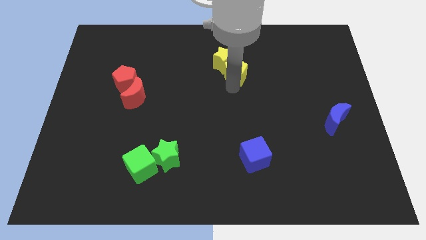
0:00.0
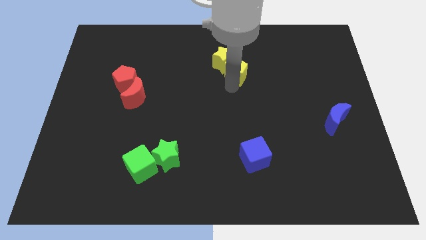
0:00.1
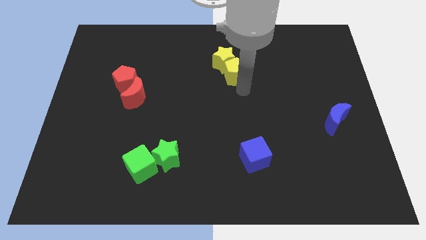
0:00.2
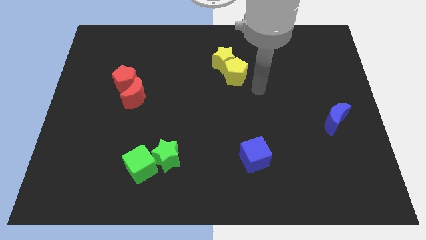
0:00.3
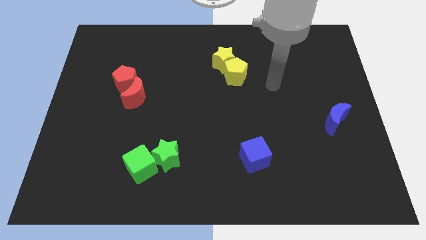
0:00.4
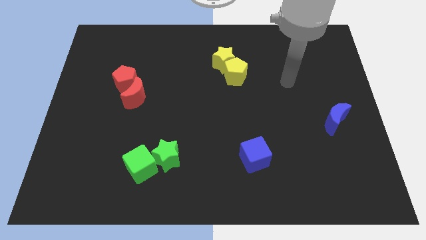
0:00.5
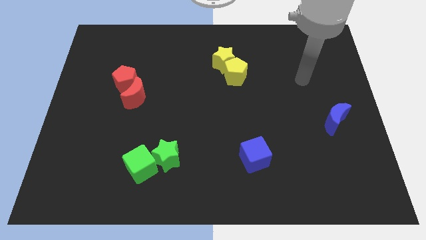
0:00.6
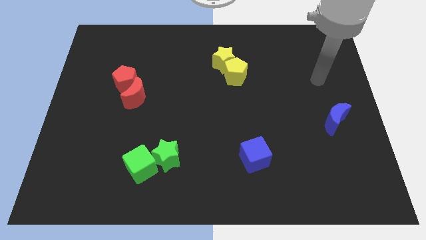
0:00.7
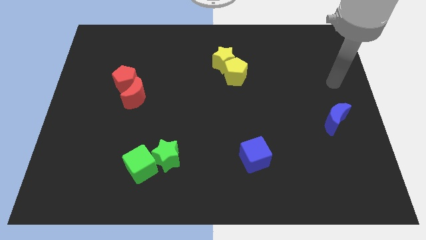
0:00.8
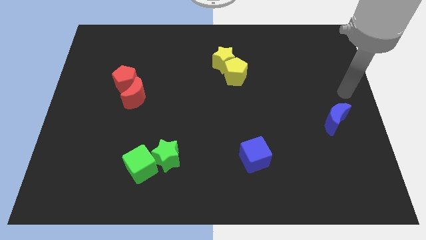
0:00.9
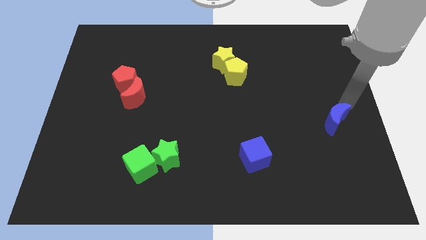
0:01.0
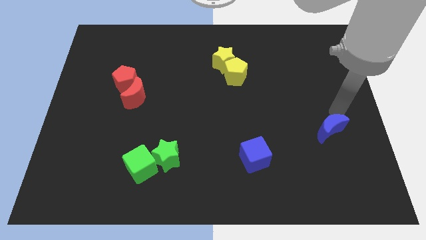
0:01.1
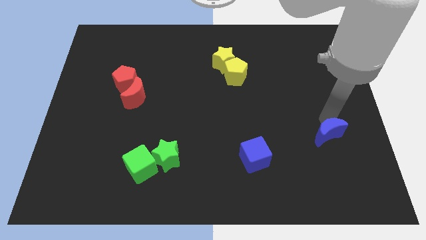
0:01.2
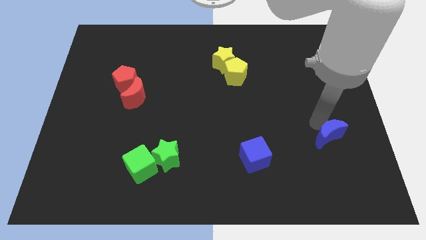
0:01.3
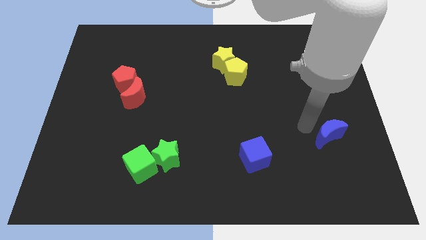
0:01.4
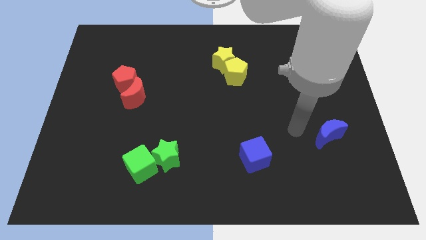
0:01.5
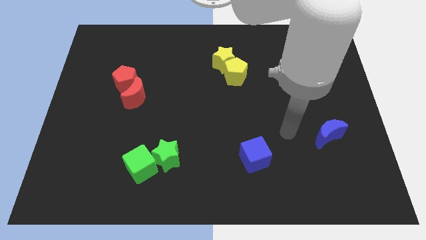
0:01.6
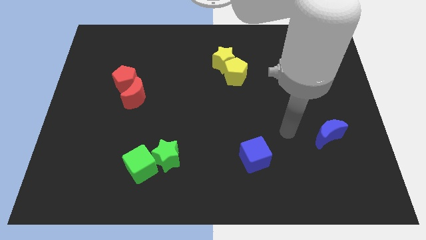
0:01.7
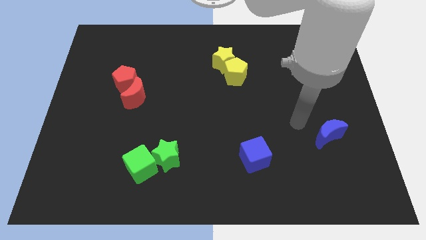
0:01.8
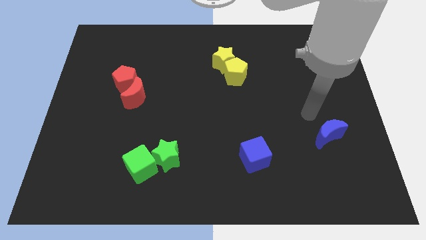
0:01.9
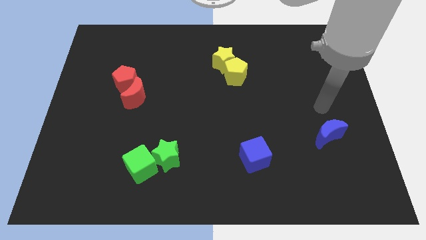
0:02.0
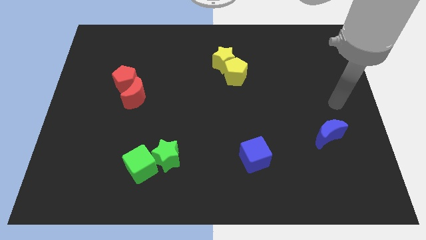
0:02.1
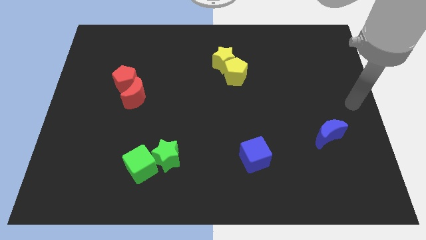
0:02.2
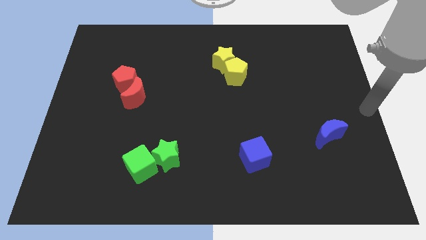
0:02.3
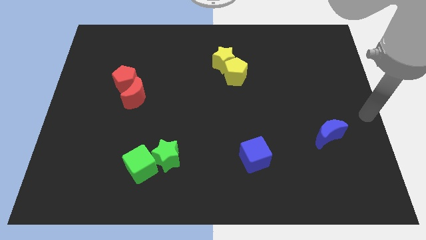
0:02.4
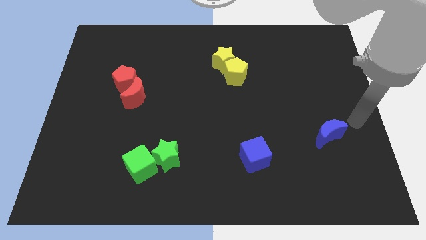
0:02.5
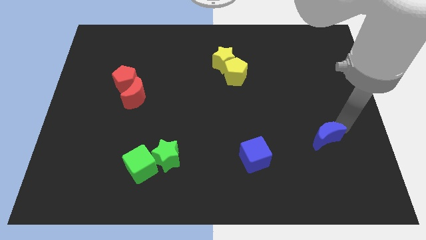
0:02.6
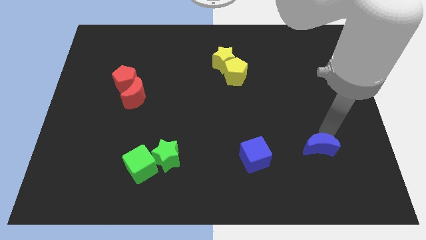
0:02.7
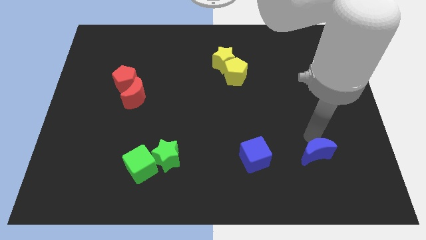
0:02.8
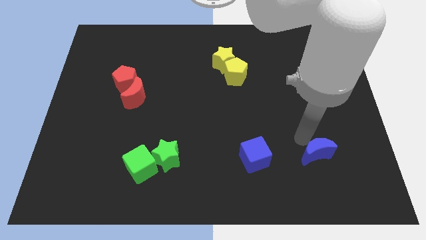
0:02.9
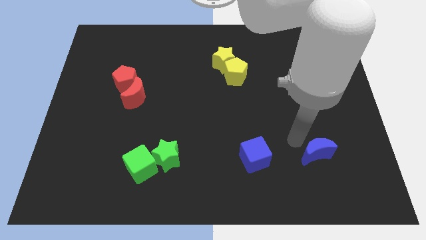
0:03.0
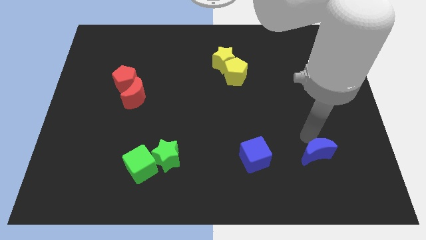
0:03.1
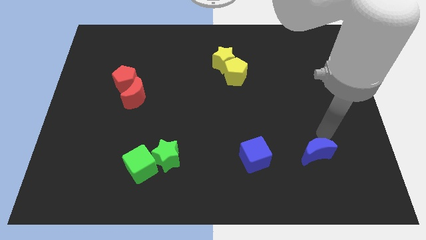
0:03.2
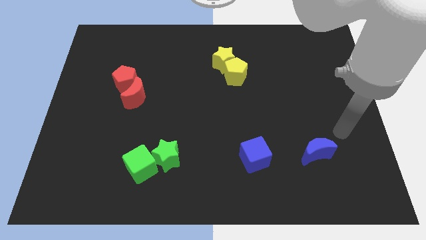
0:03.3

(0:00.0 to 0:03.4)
point your arm close to blue moon

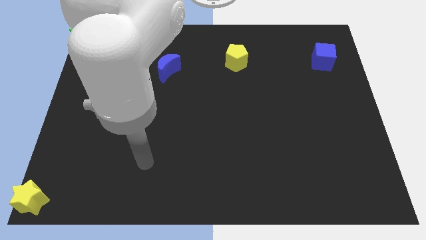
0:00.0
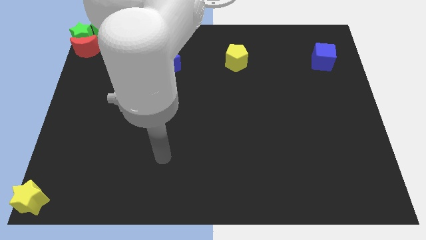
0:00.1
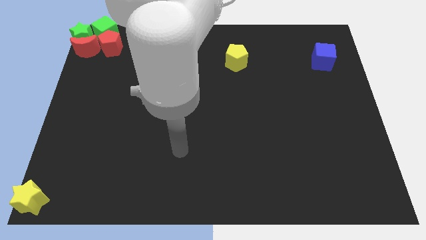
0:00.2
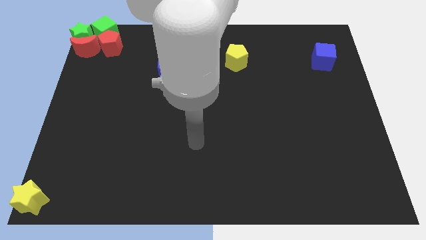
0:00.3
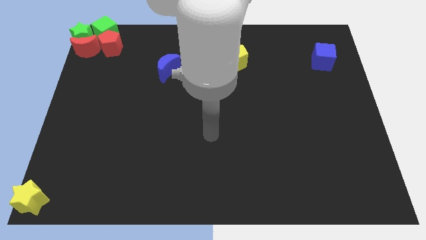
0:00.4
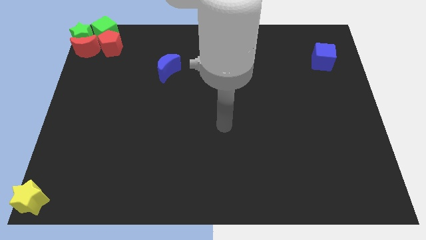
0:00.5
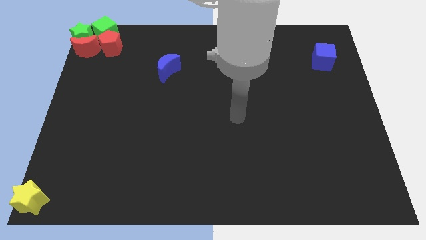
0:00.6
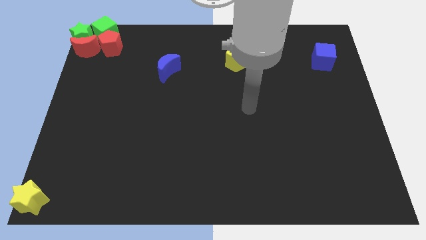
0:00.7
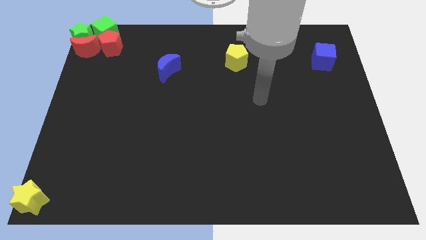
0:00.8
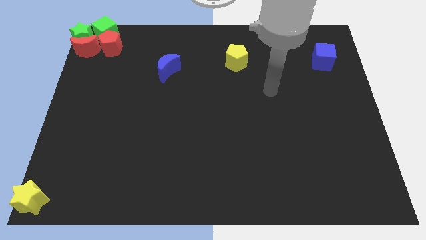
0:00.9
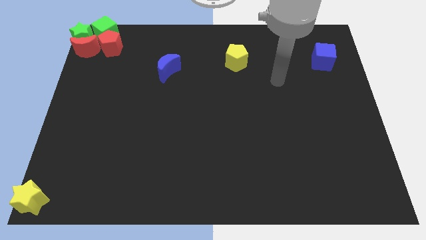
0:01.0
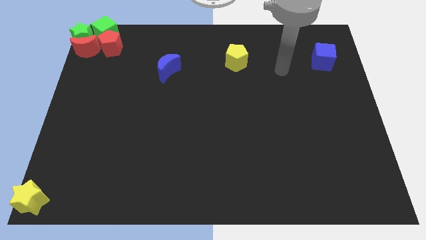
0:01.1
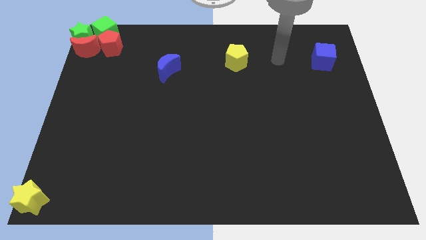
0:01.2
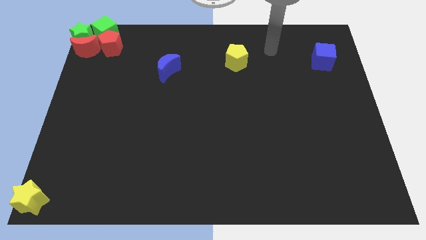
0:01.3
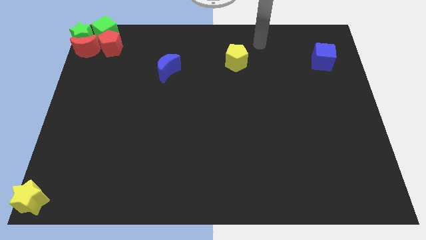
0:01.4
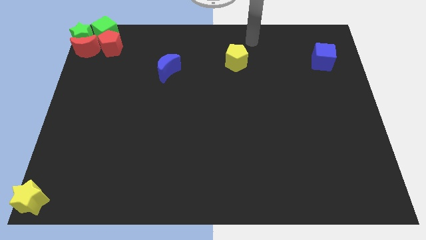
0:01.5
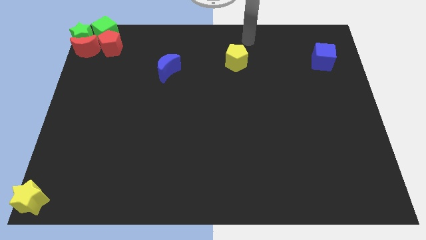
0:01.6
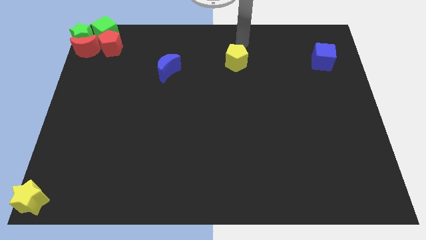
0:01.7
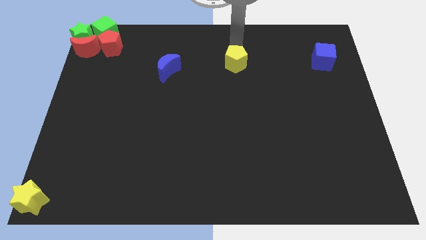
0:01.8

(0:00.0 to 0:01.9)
place the arm above the yellow pentagon

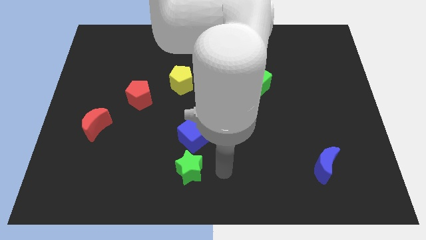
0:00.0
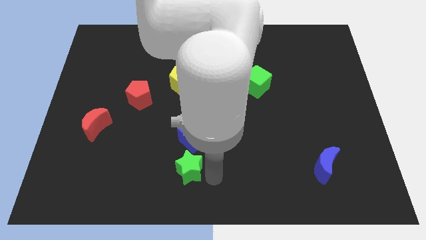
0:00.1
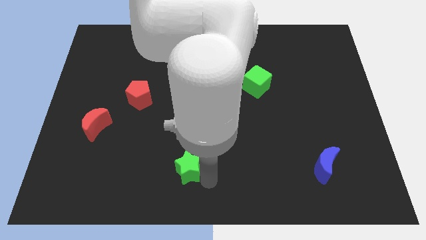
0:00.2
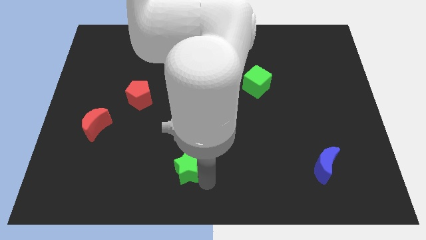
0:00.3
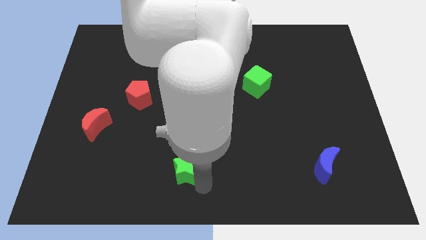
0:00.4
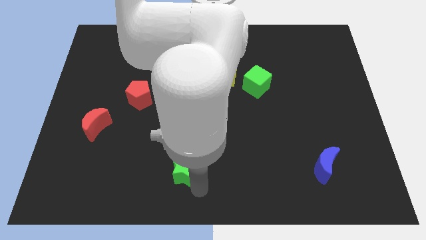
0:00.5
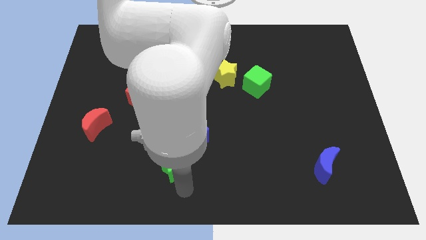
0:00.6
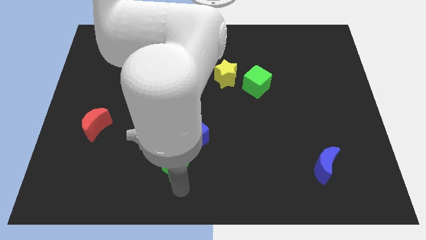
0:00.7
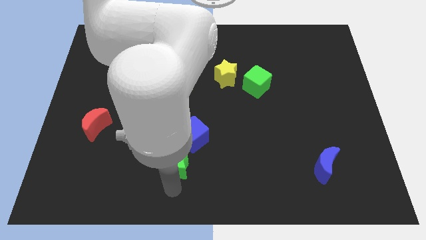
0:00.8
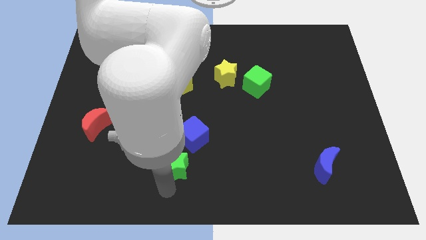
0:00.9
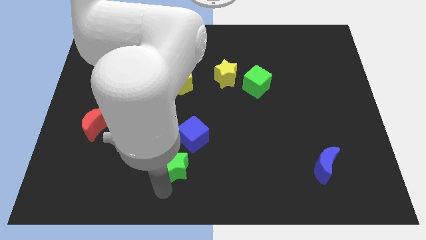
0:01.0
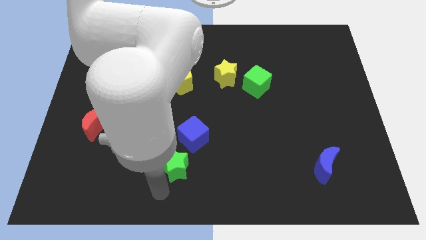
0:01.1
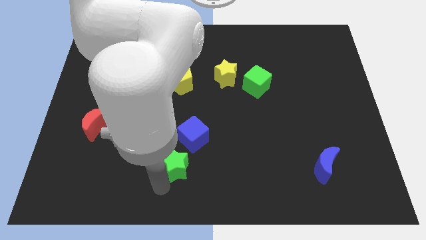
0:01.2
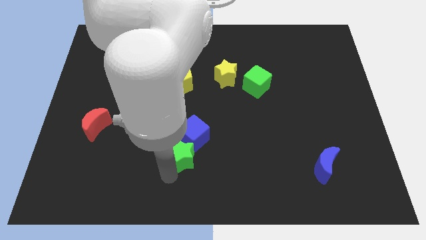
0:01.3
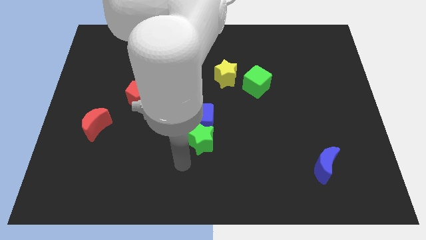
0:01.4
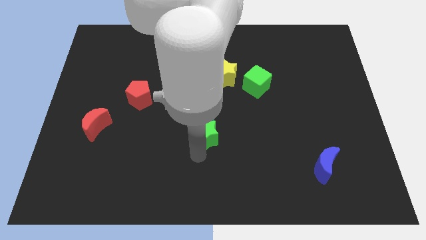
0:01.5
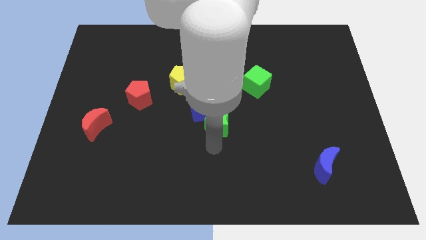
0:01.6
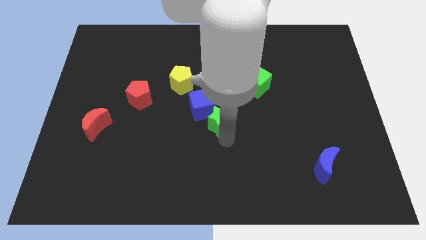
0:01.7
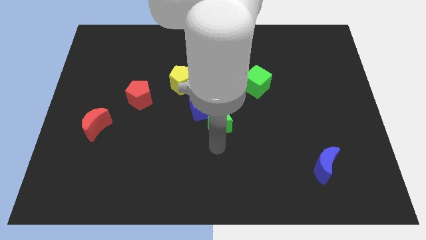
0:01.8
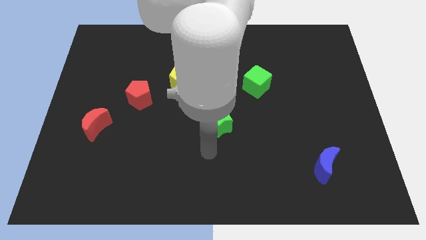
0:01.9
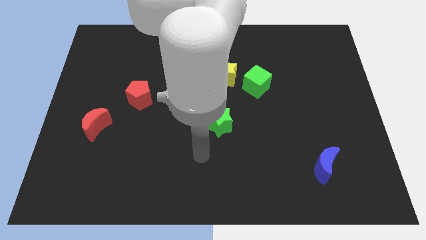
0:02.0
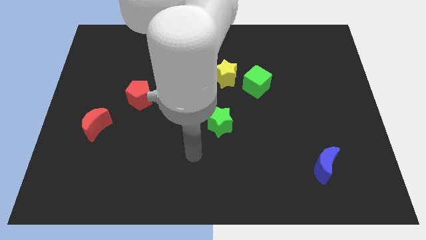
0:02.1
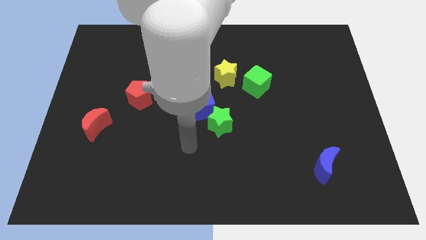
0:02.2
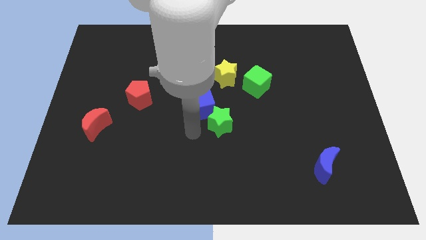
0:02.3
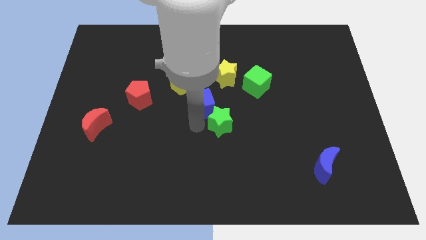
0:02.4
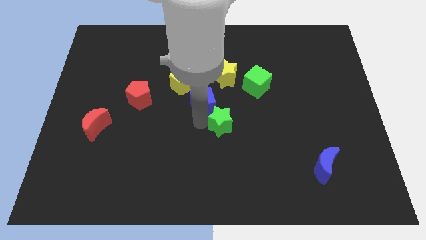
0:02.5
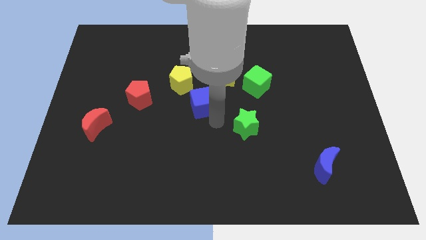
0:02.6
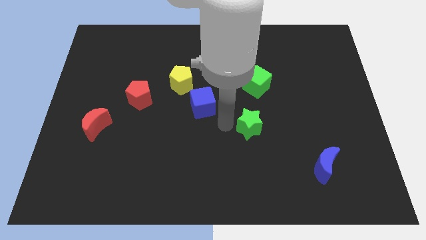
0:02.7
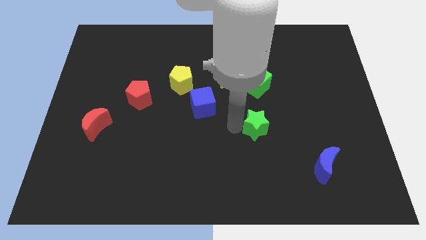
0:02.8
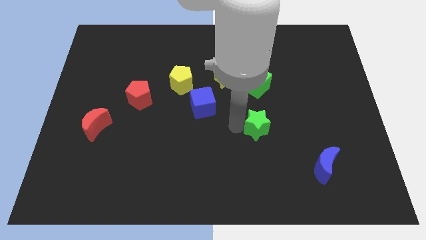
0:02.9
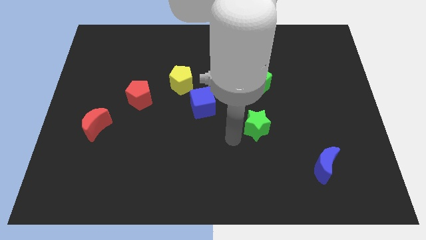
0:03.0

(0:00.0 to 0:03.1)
separate green star from the blue cube

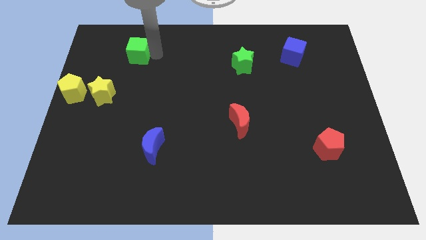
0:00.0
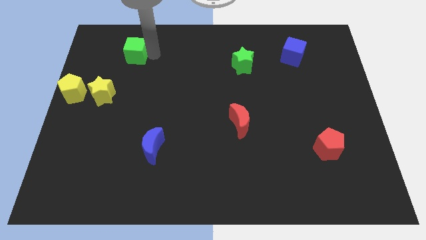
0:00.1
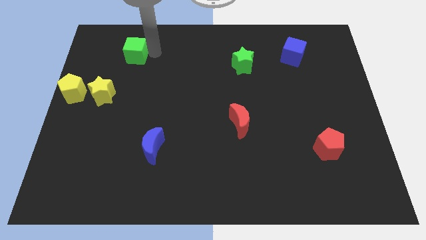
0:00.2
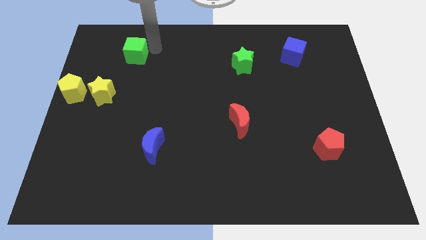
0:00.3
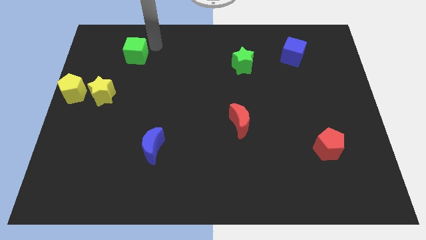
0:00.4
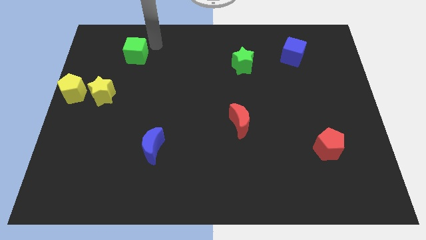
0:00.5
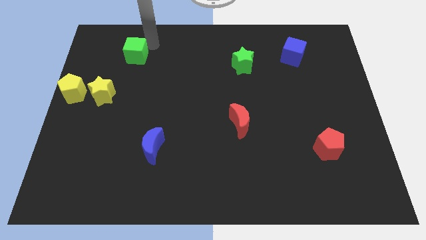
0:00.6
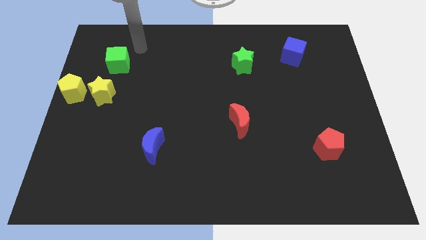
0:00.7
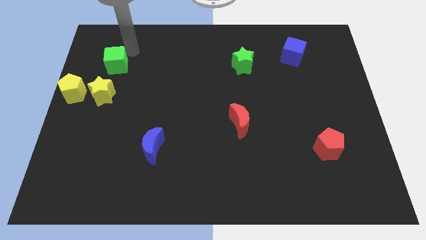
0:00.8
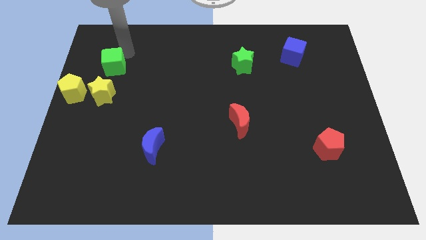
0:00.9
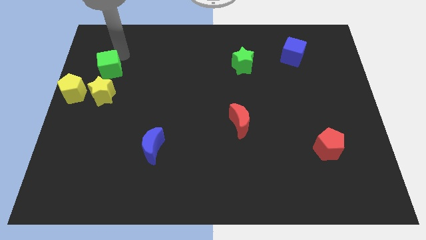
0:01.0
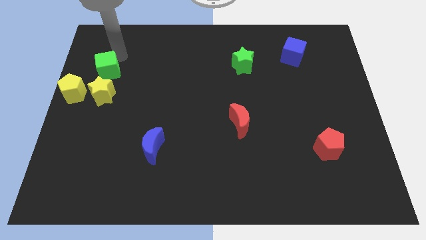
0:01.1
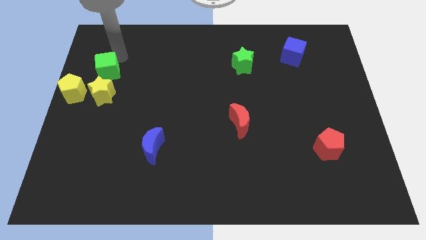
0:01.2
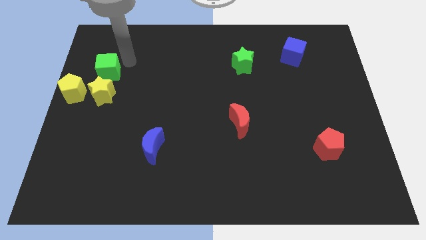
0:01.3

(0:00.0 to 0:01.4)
slide the green cube to the top side of the yellow star
